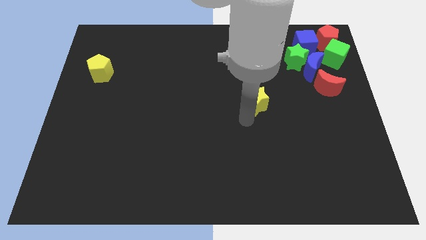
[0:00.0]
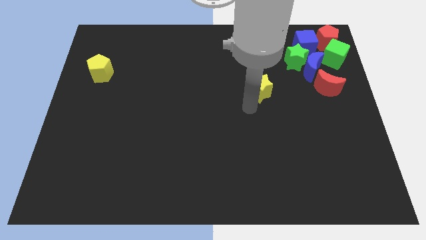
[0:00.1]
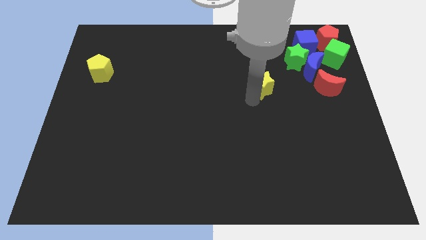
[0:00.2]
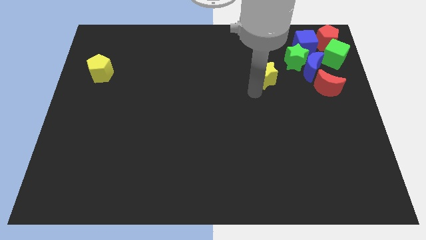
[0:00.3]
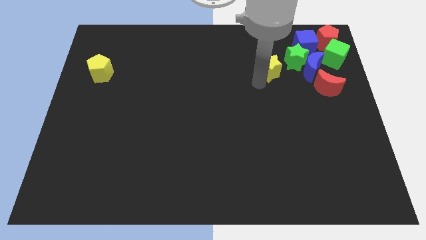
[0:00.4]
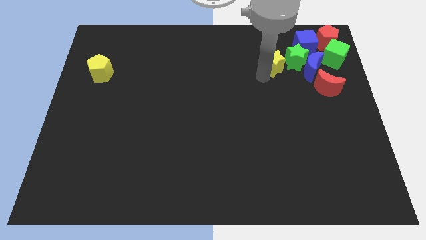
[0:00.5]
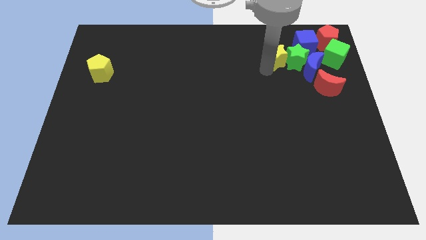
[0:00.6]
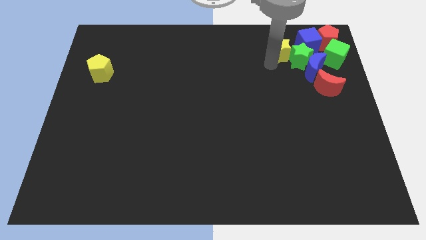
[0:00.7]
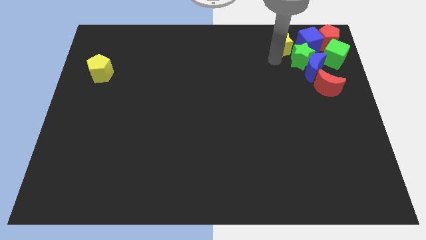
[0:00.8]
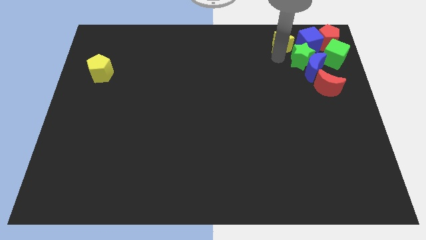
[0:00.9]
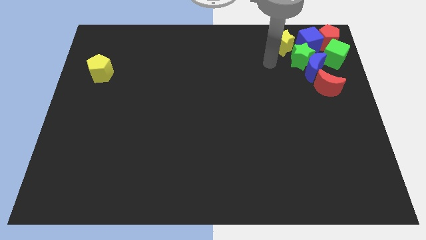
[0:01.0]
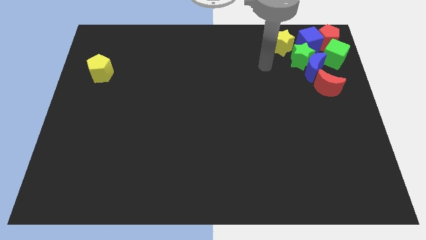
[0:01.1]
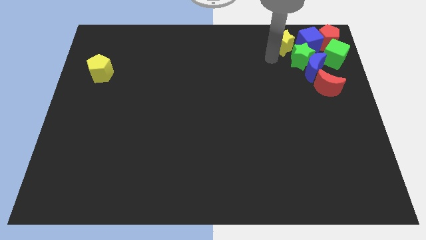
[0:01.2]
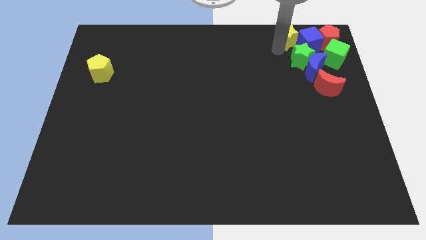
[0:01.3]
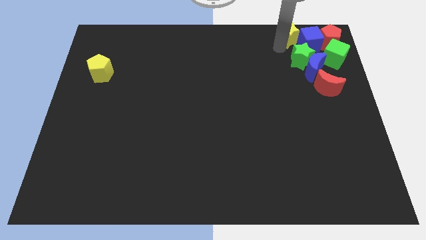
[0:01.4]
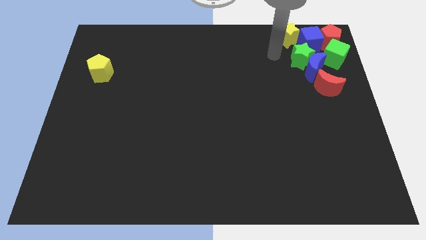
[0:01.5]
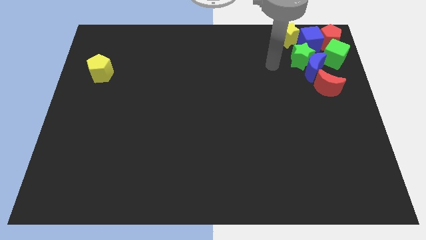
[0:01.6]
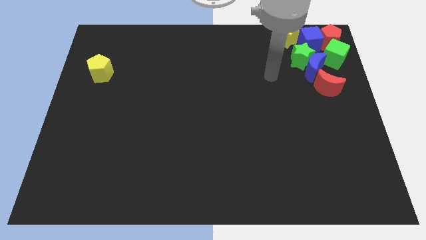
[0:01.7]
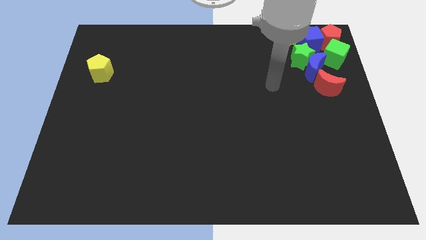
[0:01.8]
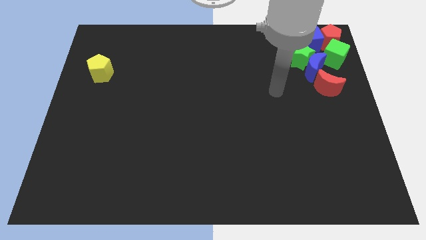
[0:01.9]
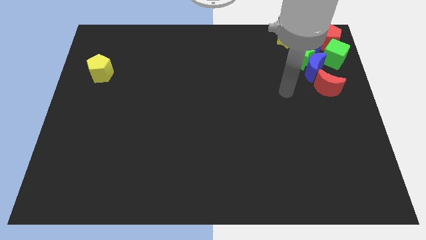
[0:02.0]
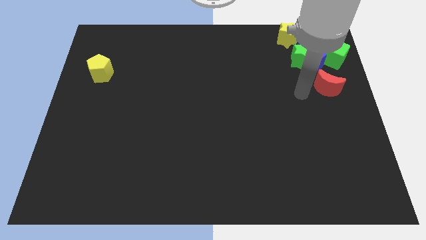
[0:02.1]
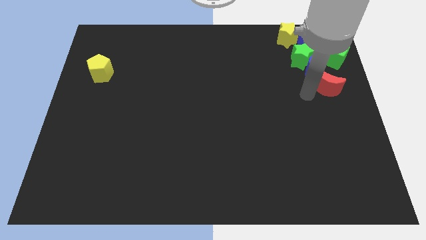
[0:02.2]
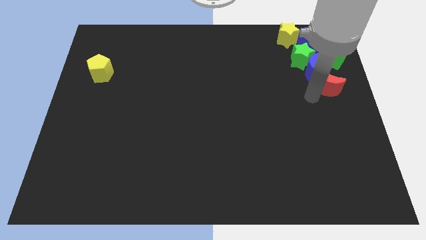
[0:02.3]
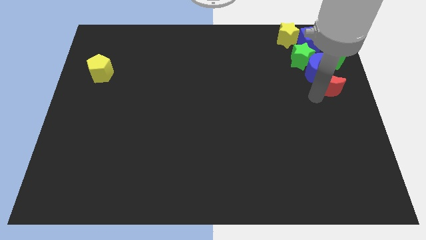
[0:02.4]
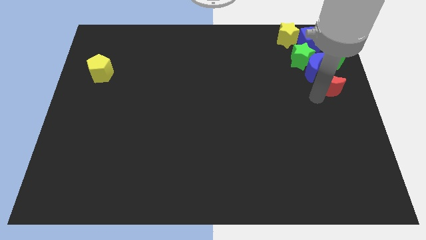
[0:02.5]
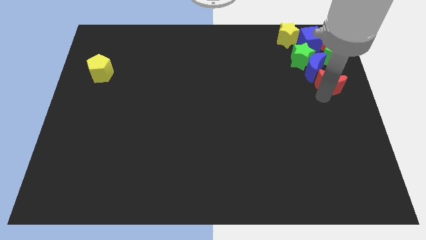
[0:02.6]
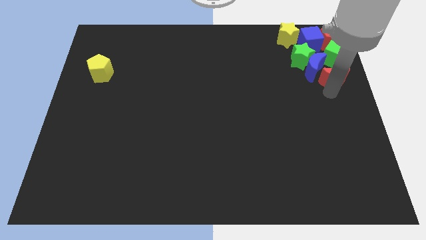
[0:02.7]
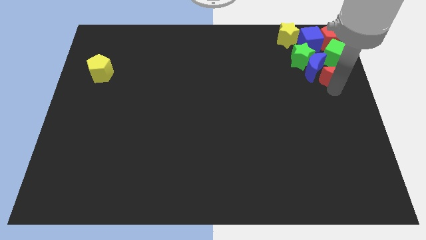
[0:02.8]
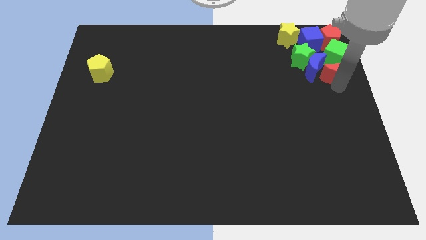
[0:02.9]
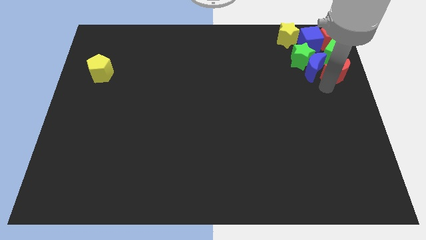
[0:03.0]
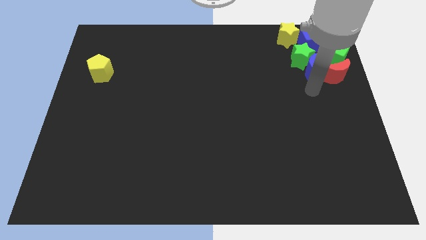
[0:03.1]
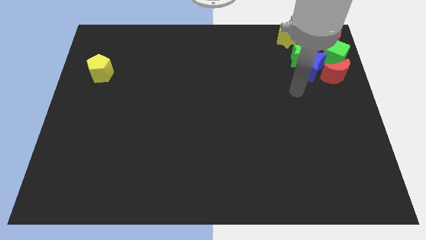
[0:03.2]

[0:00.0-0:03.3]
place the yellow star at the left side of the blue cube

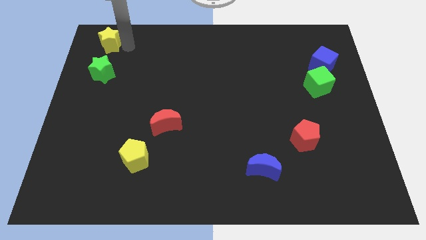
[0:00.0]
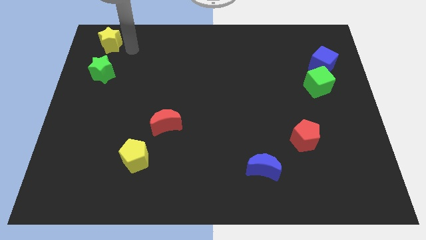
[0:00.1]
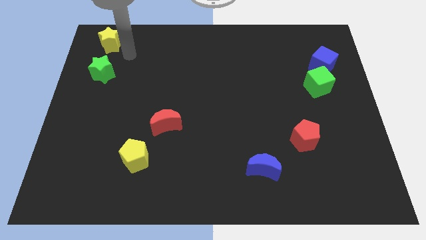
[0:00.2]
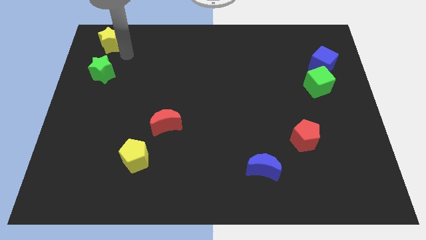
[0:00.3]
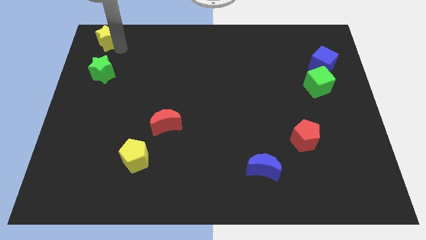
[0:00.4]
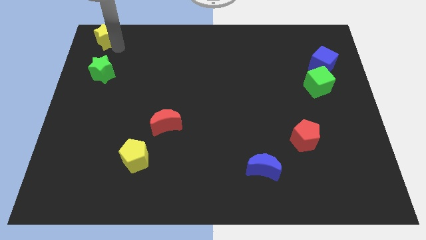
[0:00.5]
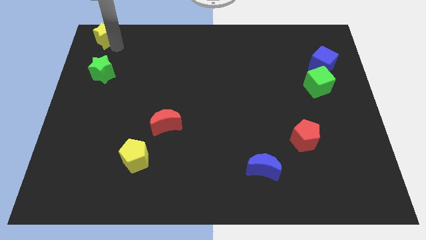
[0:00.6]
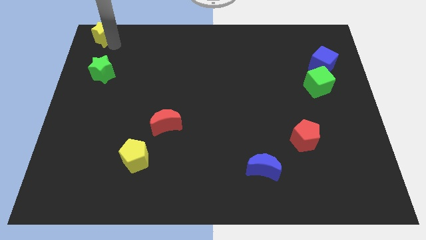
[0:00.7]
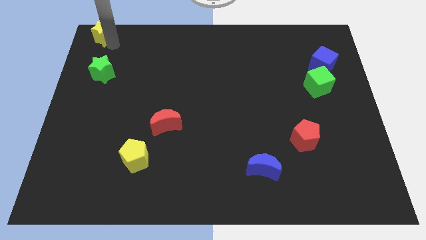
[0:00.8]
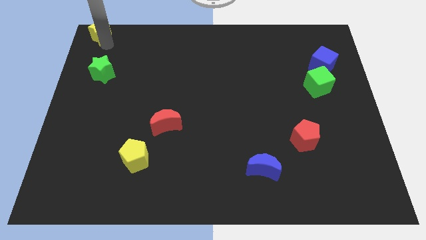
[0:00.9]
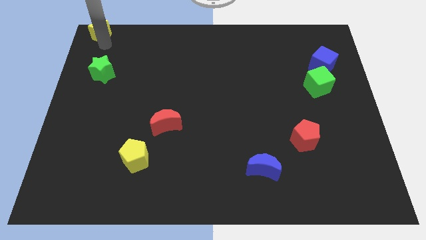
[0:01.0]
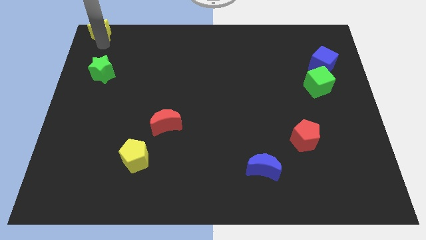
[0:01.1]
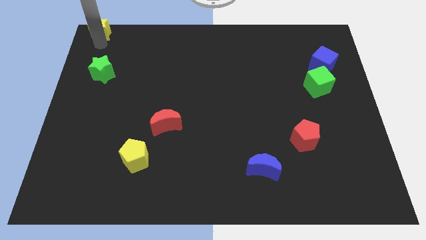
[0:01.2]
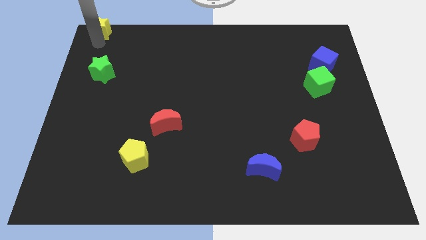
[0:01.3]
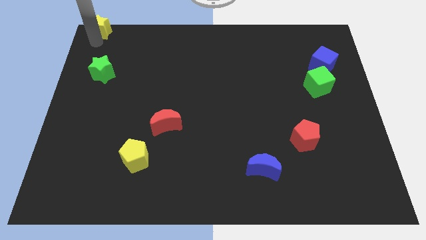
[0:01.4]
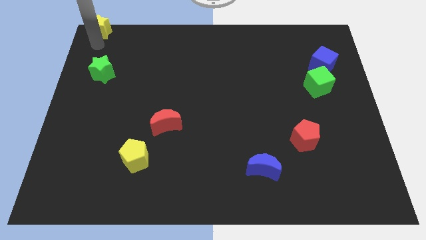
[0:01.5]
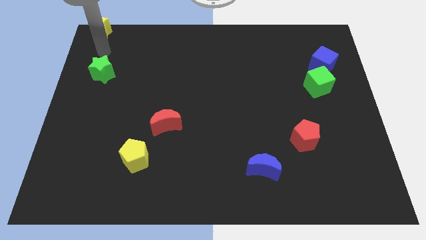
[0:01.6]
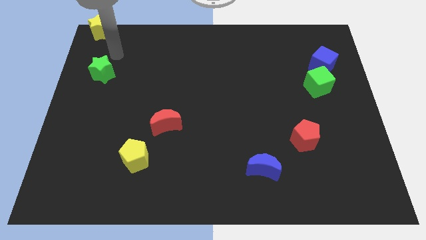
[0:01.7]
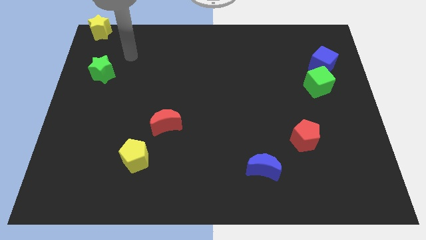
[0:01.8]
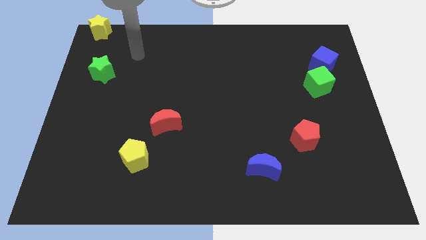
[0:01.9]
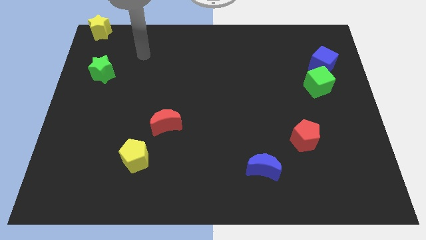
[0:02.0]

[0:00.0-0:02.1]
move the yellow star to the top left corner of the board

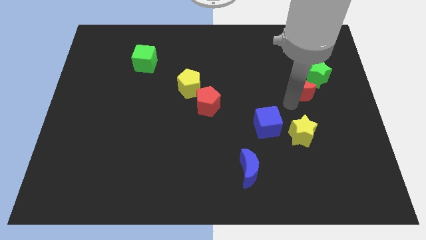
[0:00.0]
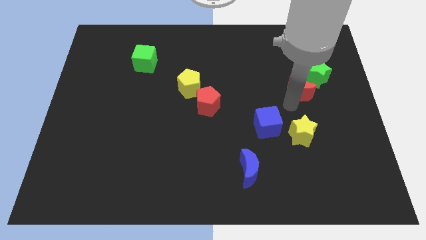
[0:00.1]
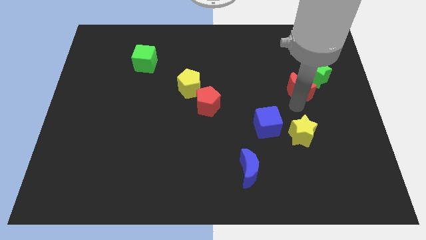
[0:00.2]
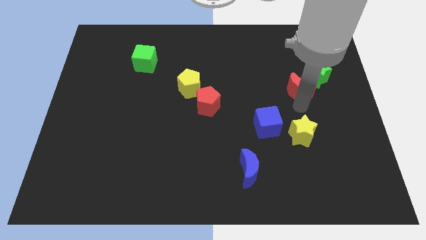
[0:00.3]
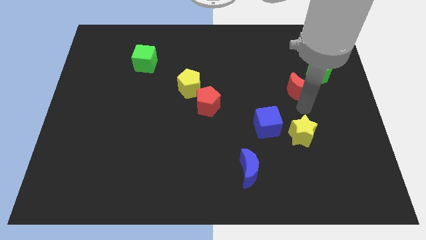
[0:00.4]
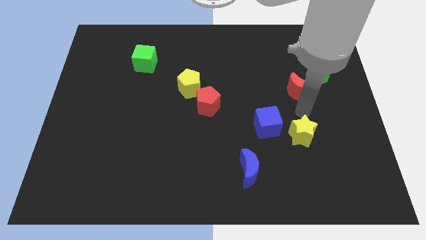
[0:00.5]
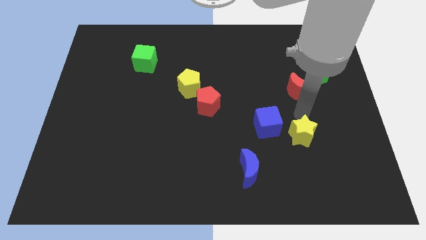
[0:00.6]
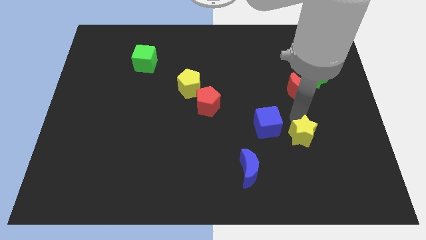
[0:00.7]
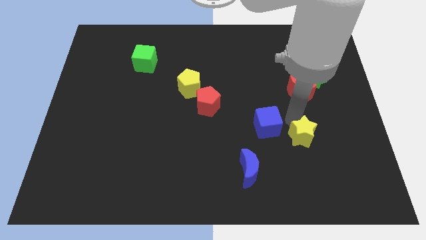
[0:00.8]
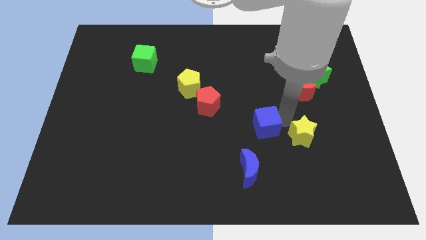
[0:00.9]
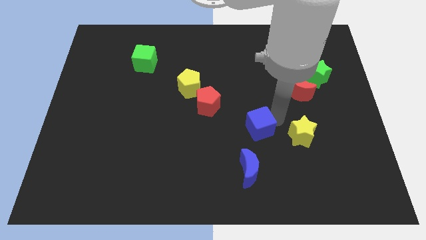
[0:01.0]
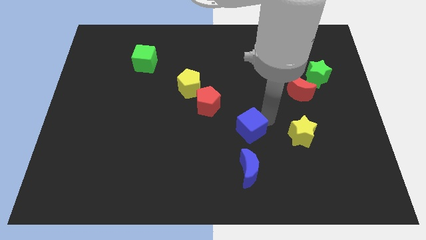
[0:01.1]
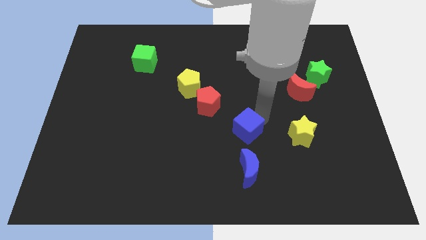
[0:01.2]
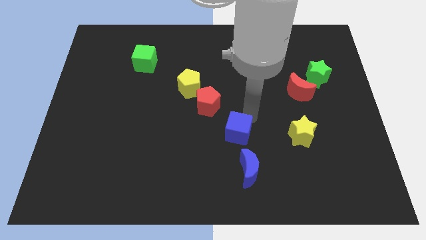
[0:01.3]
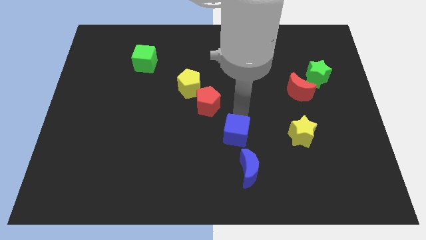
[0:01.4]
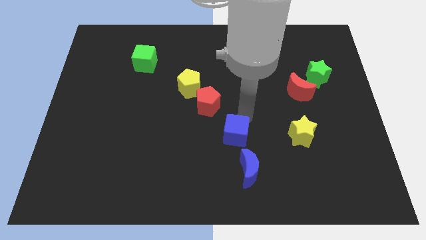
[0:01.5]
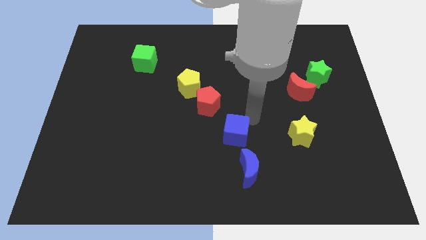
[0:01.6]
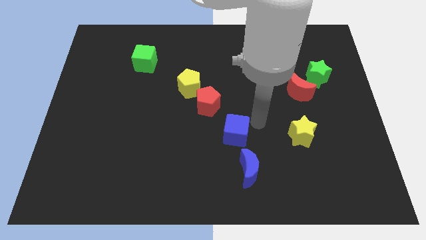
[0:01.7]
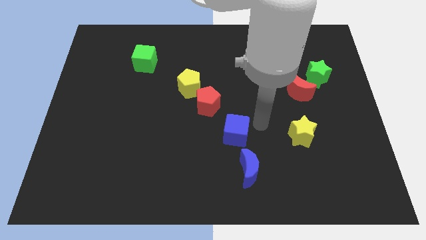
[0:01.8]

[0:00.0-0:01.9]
push the blue cube slightly to the left

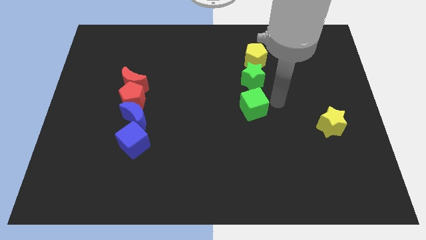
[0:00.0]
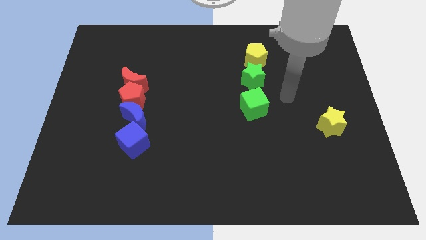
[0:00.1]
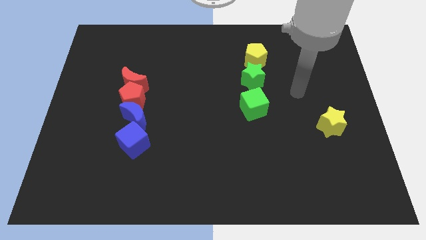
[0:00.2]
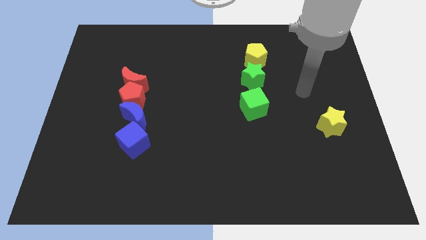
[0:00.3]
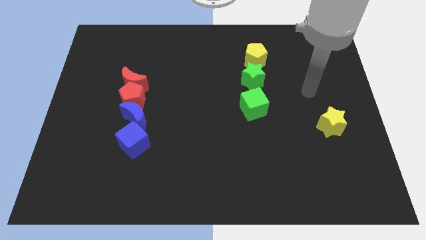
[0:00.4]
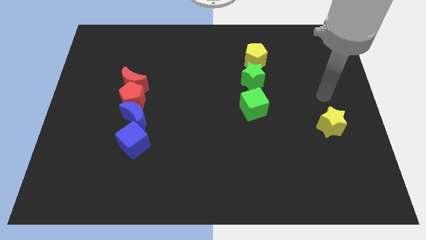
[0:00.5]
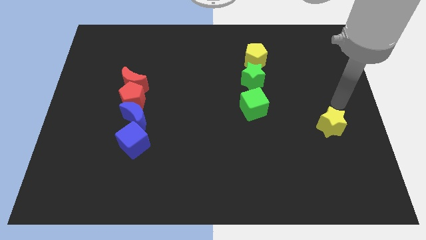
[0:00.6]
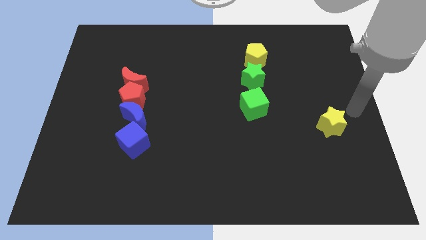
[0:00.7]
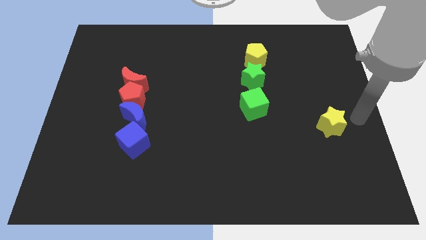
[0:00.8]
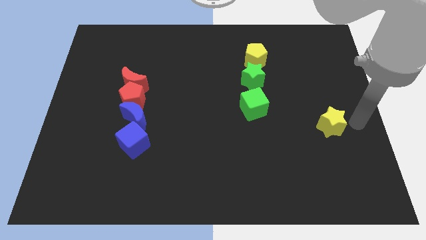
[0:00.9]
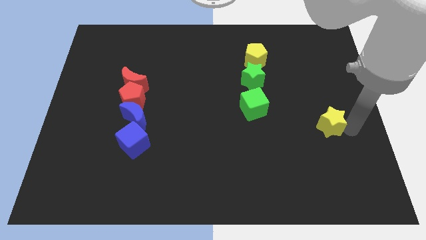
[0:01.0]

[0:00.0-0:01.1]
place your hand to the right of the yellow star

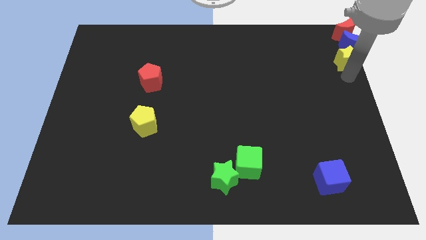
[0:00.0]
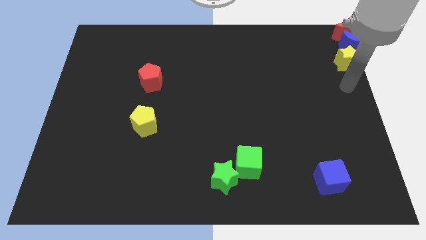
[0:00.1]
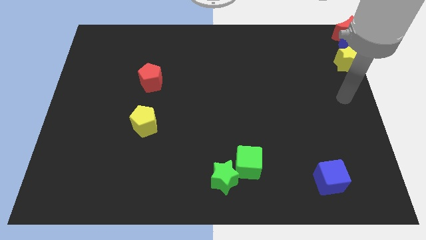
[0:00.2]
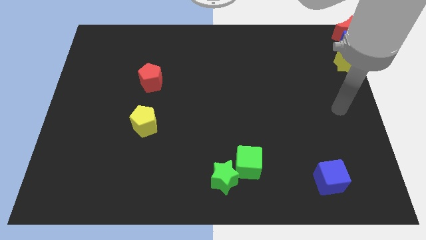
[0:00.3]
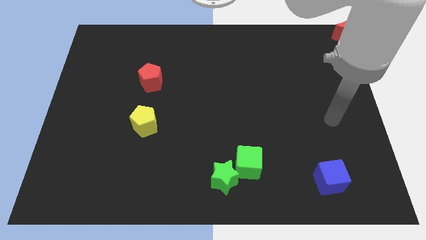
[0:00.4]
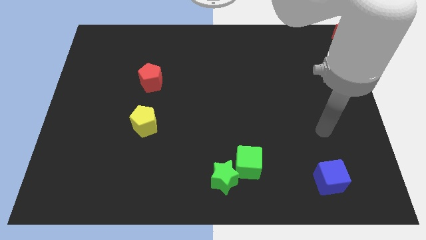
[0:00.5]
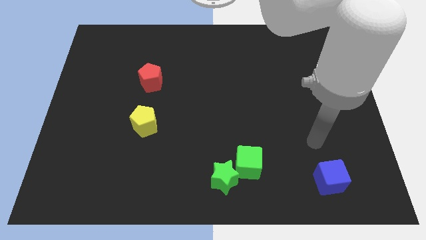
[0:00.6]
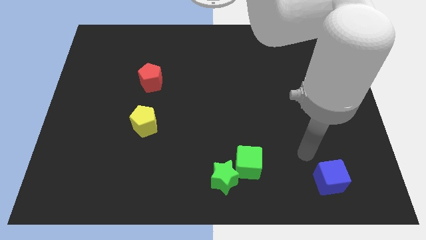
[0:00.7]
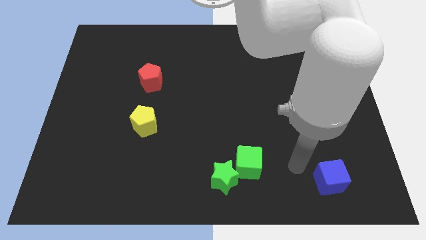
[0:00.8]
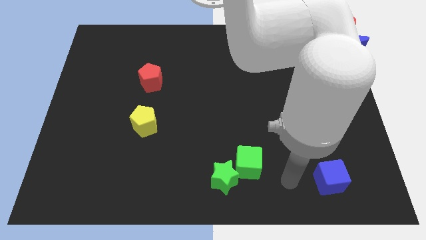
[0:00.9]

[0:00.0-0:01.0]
move your arm away from yellow star
